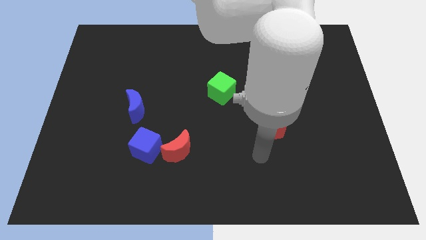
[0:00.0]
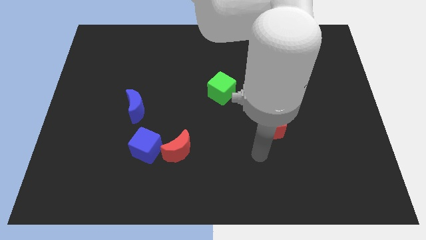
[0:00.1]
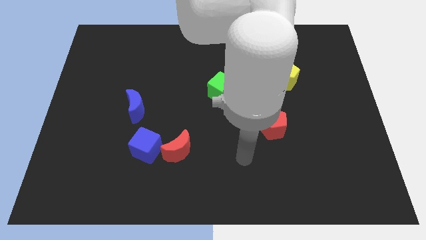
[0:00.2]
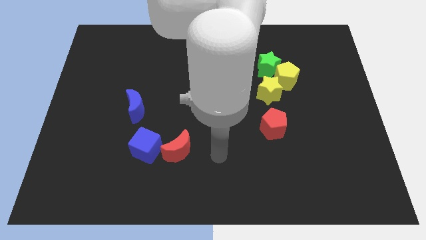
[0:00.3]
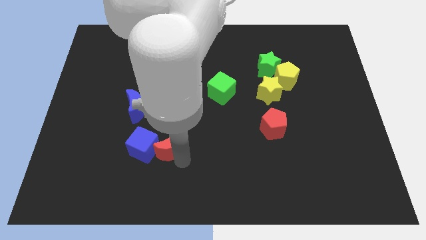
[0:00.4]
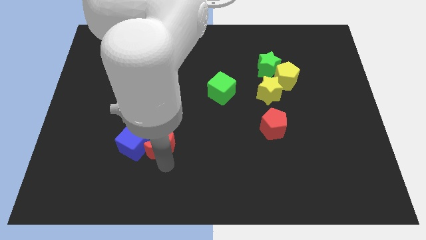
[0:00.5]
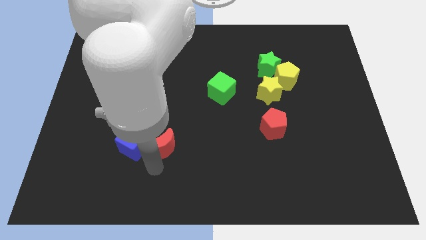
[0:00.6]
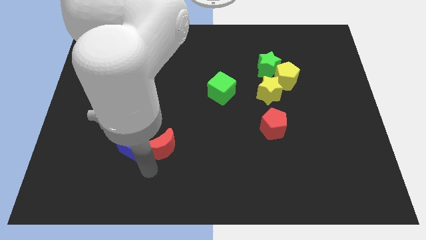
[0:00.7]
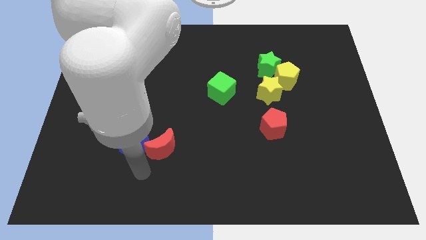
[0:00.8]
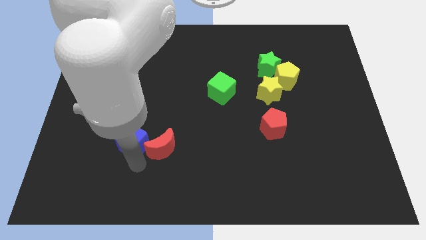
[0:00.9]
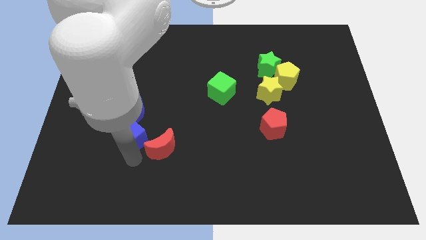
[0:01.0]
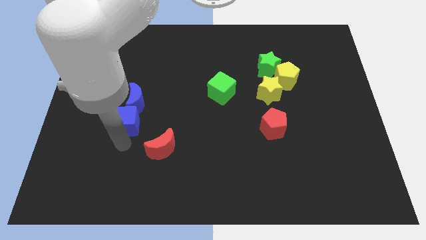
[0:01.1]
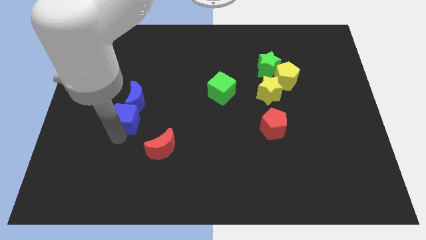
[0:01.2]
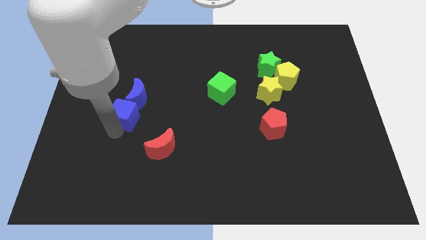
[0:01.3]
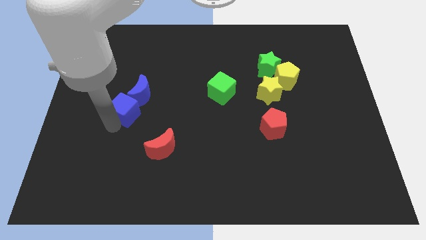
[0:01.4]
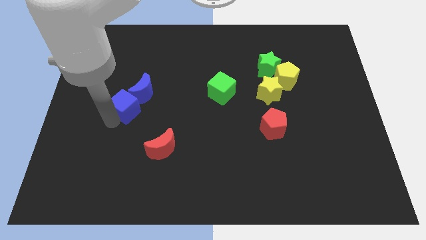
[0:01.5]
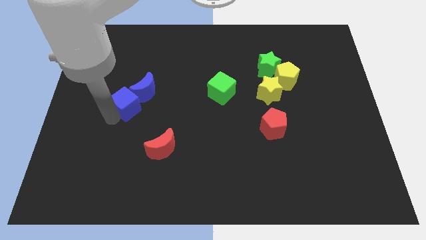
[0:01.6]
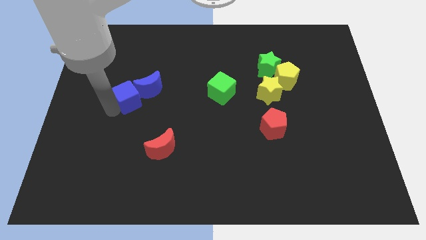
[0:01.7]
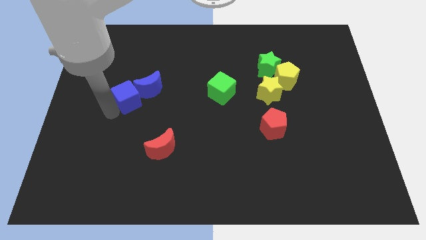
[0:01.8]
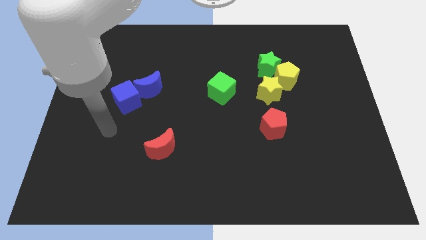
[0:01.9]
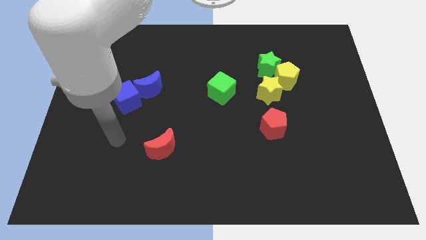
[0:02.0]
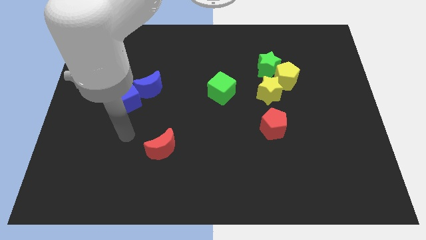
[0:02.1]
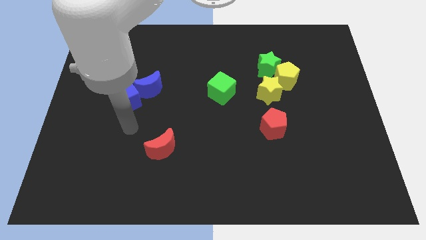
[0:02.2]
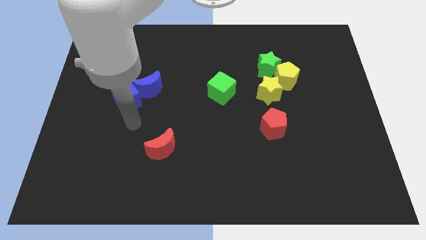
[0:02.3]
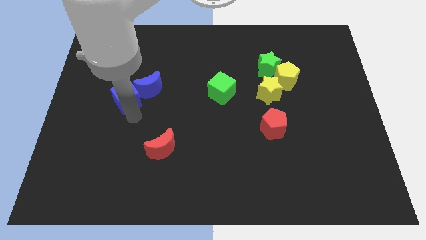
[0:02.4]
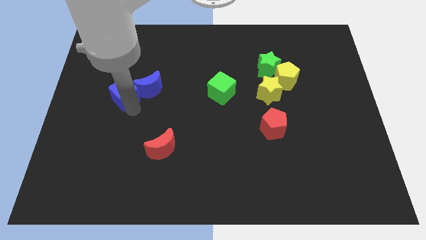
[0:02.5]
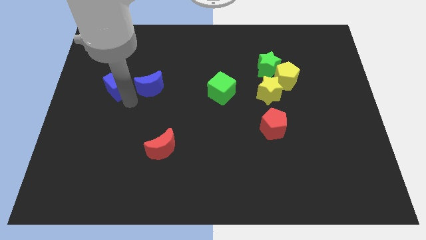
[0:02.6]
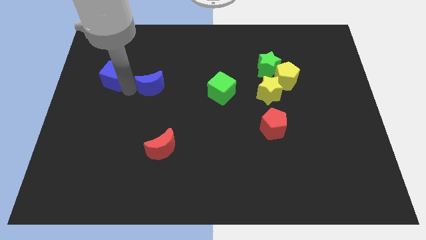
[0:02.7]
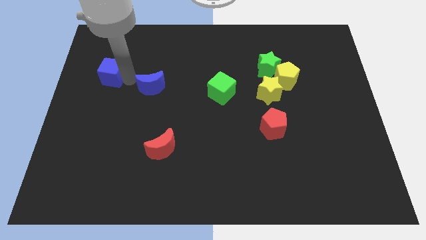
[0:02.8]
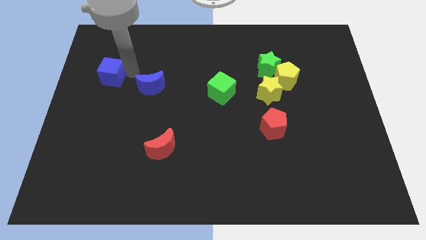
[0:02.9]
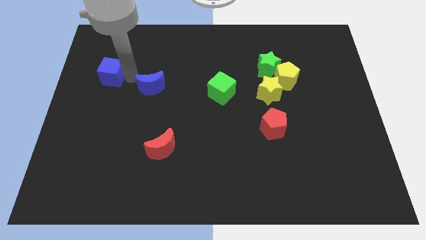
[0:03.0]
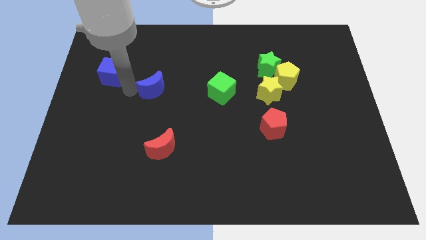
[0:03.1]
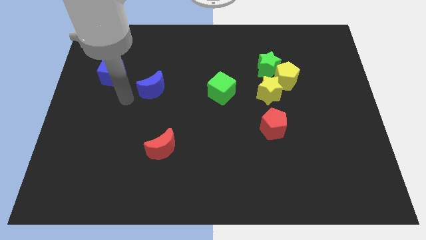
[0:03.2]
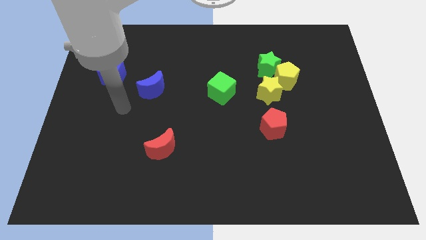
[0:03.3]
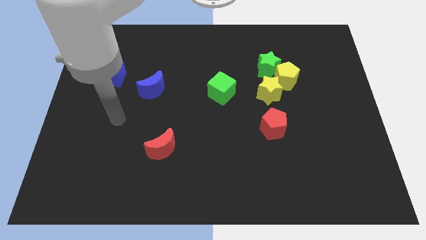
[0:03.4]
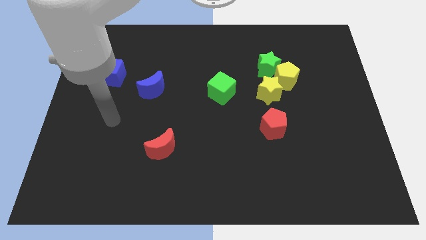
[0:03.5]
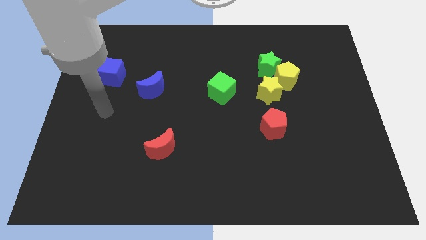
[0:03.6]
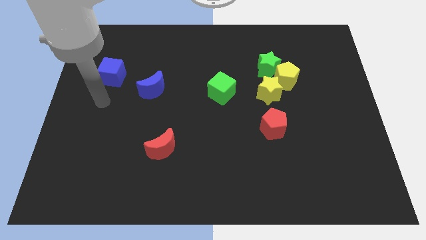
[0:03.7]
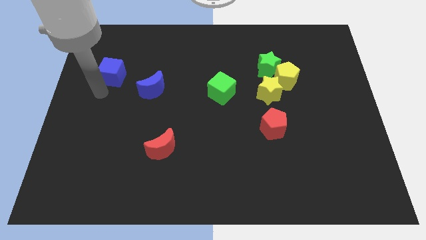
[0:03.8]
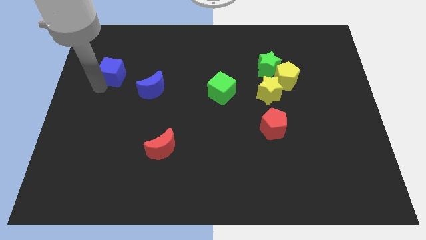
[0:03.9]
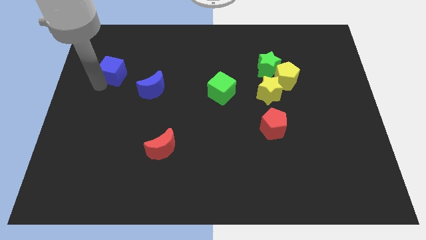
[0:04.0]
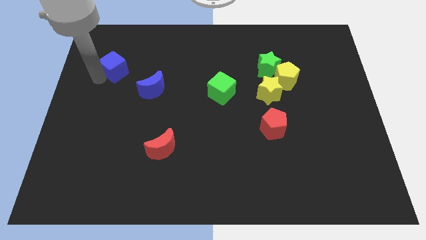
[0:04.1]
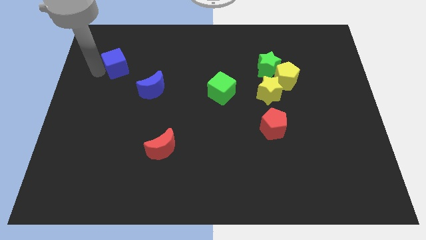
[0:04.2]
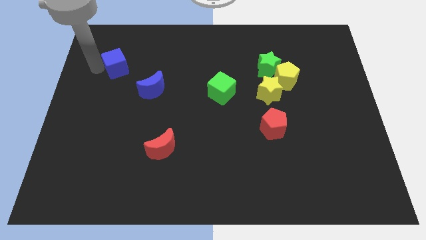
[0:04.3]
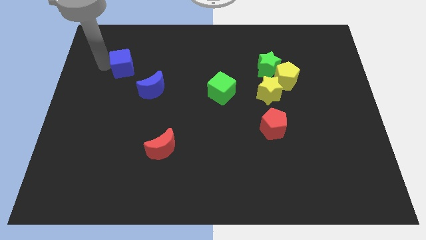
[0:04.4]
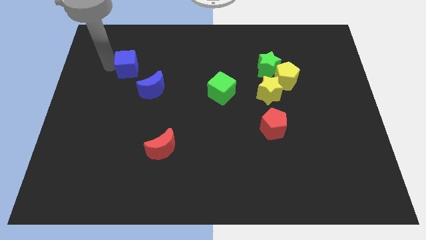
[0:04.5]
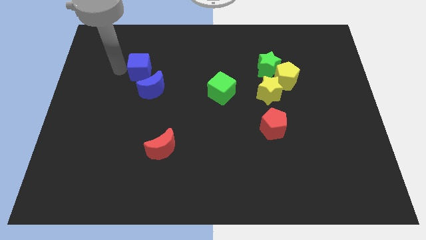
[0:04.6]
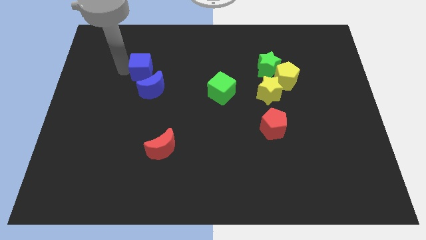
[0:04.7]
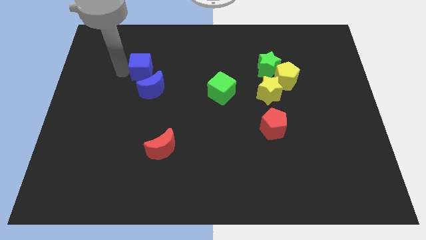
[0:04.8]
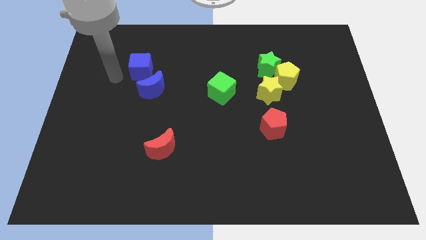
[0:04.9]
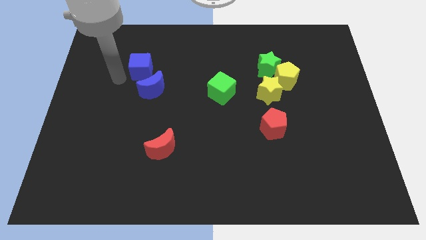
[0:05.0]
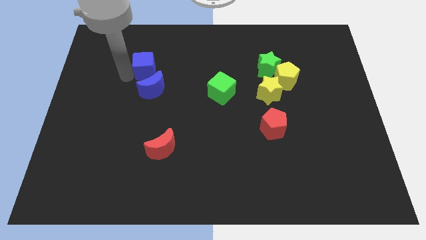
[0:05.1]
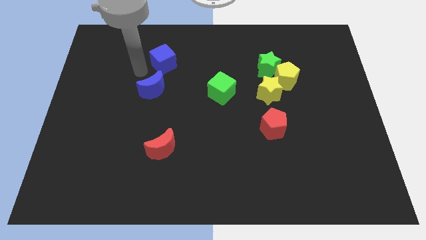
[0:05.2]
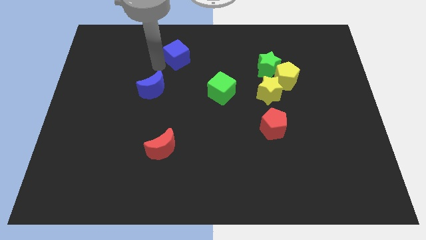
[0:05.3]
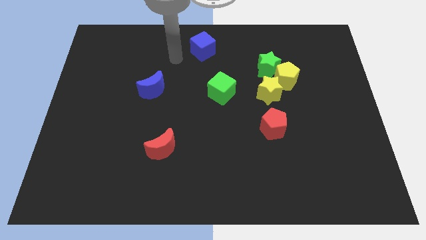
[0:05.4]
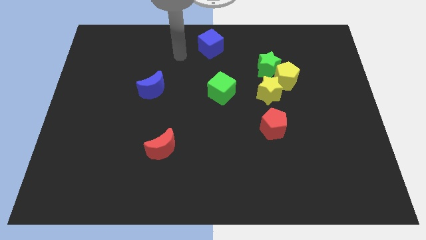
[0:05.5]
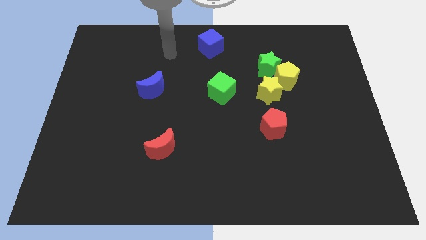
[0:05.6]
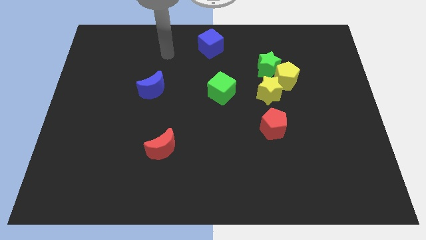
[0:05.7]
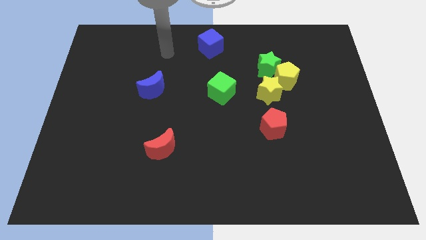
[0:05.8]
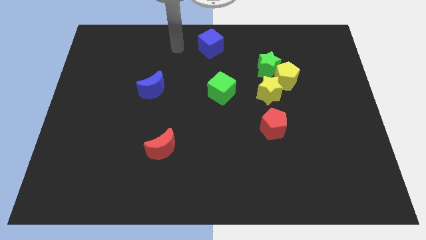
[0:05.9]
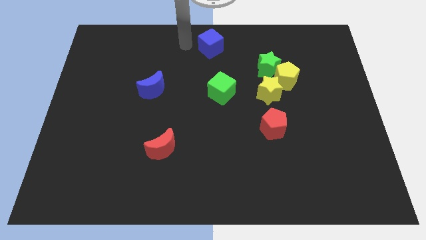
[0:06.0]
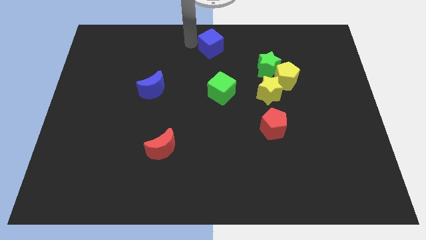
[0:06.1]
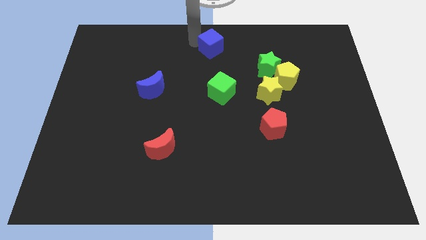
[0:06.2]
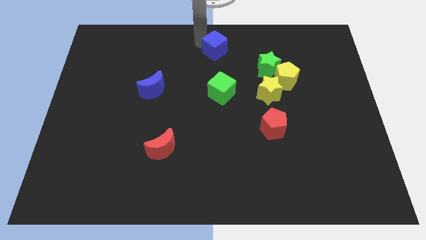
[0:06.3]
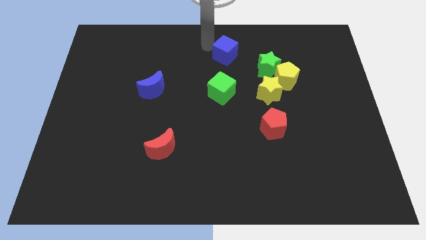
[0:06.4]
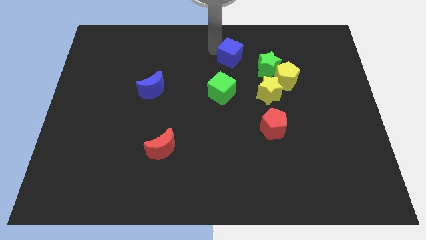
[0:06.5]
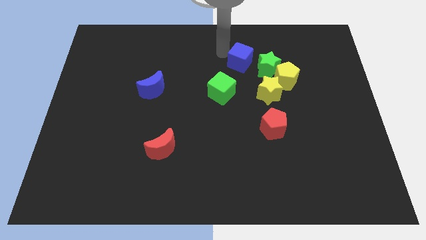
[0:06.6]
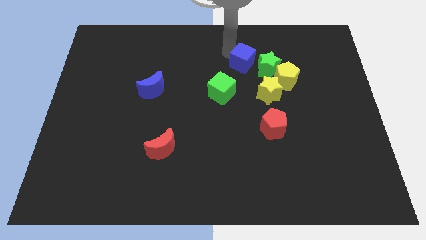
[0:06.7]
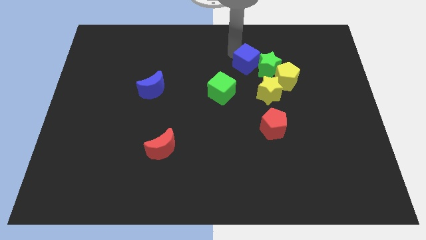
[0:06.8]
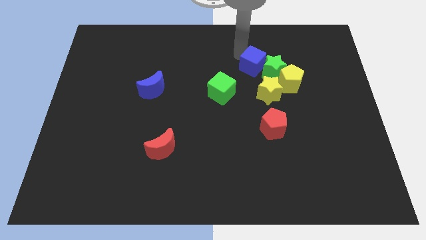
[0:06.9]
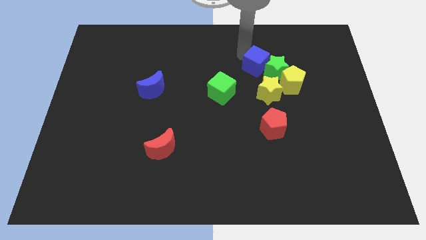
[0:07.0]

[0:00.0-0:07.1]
push the blue cube close to the green star

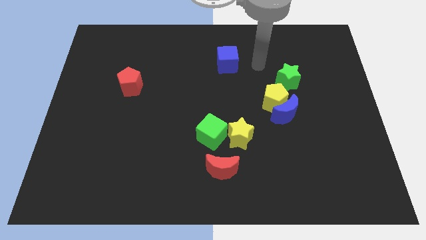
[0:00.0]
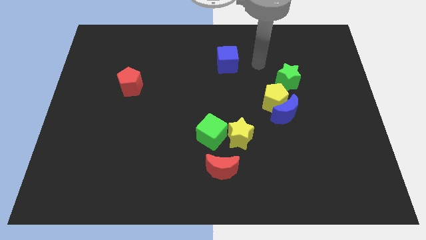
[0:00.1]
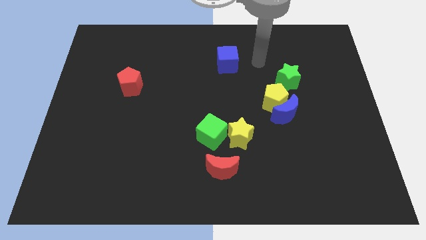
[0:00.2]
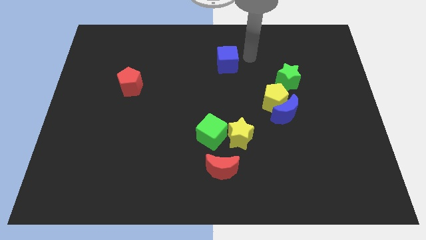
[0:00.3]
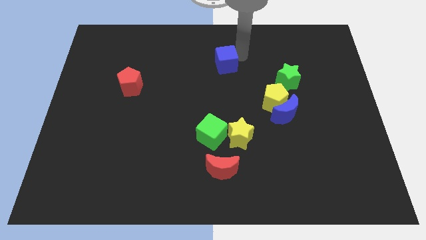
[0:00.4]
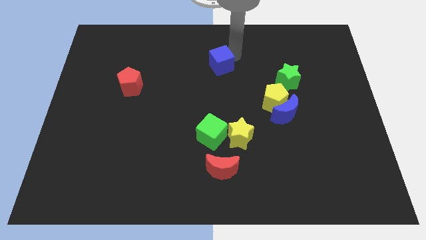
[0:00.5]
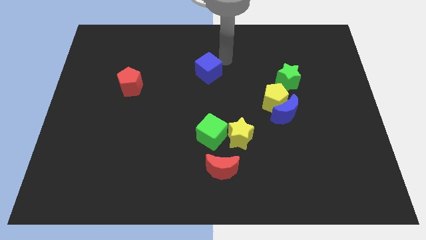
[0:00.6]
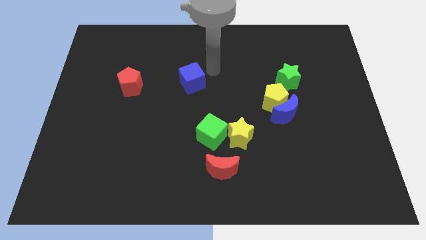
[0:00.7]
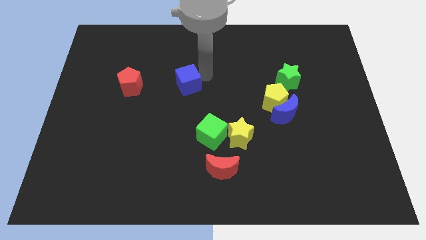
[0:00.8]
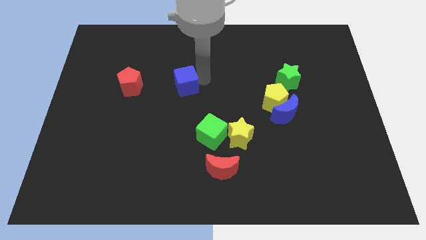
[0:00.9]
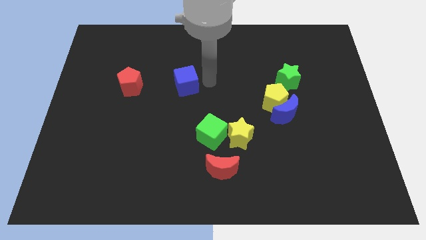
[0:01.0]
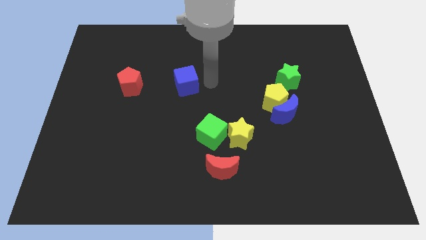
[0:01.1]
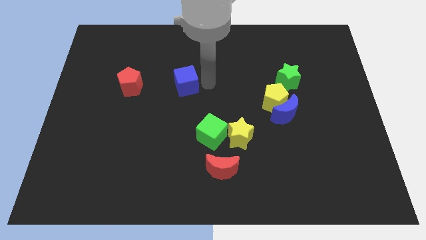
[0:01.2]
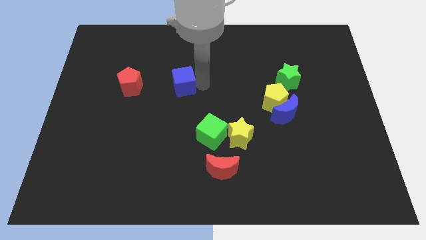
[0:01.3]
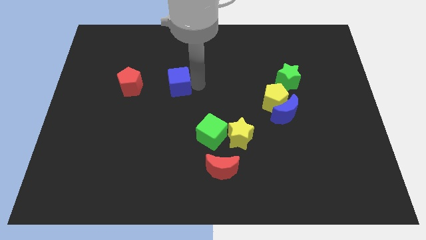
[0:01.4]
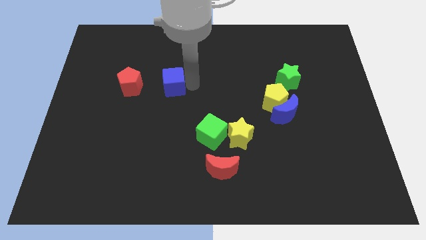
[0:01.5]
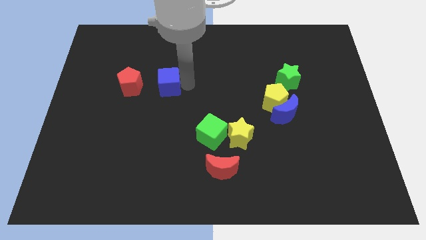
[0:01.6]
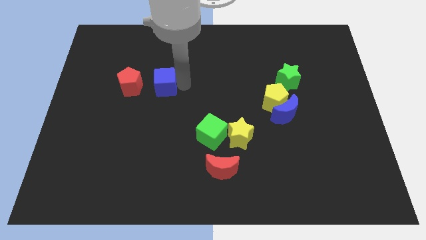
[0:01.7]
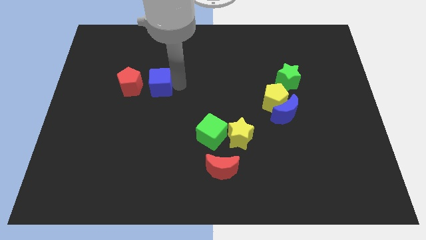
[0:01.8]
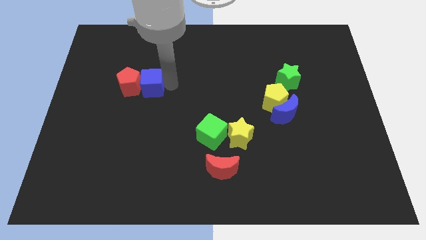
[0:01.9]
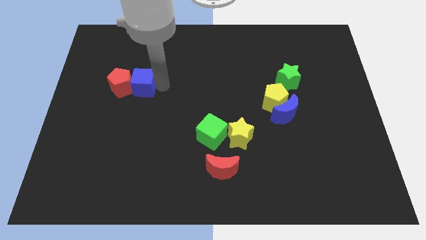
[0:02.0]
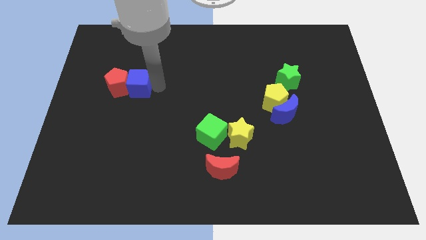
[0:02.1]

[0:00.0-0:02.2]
move the blue cube next to the red pentagon
